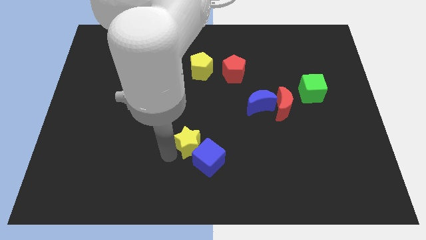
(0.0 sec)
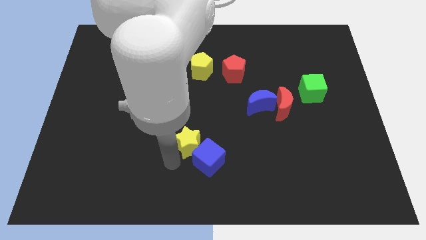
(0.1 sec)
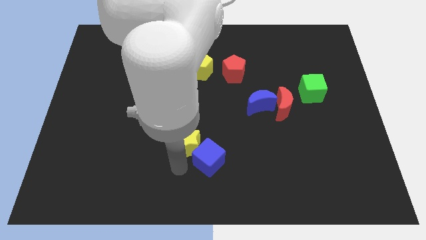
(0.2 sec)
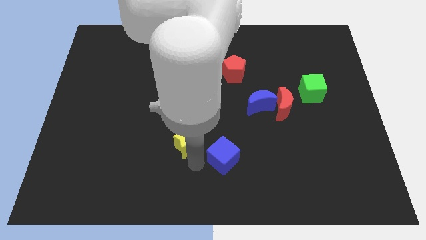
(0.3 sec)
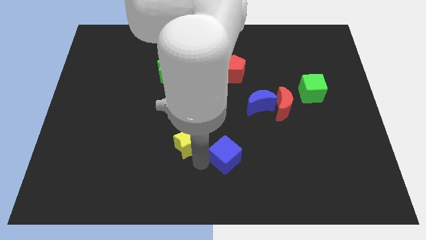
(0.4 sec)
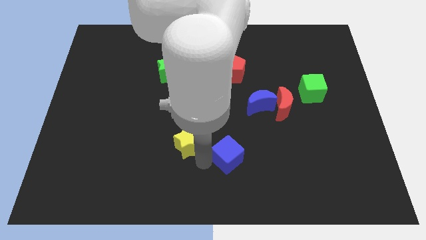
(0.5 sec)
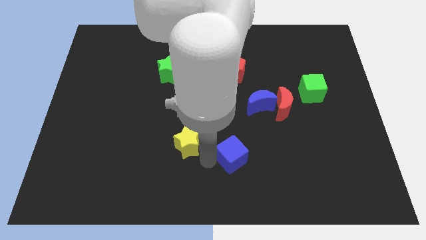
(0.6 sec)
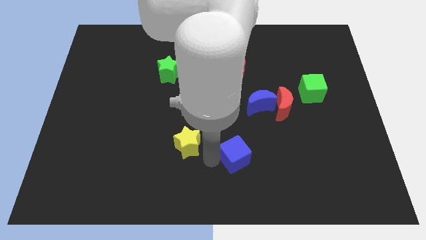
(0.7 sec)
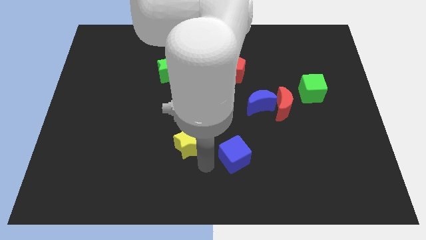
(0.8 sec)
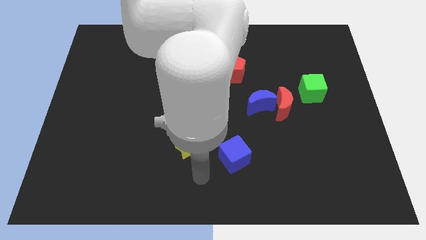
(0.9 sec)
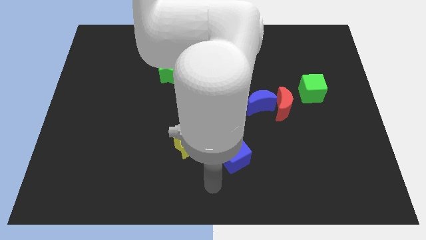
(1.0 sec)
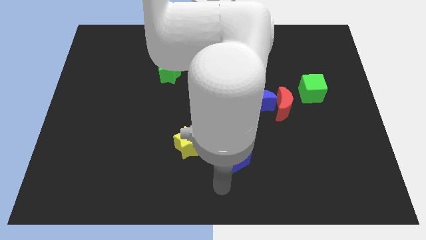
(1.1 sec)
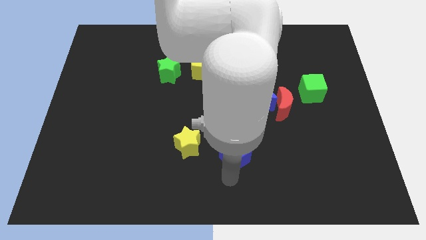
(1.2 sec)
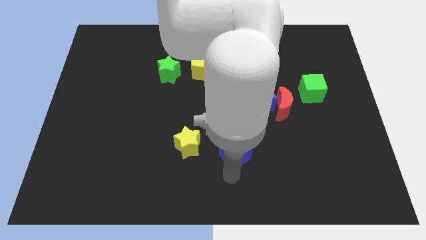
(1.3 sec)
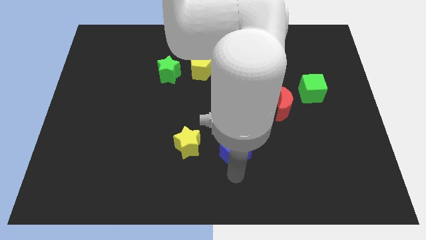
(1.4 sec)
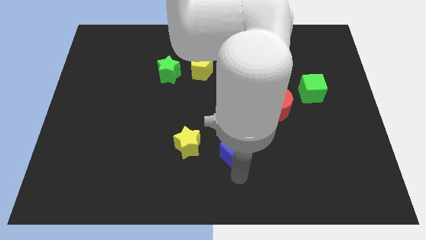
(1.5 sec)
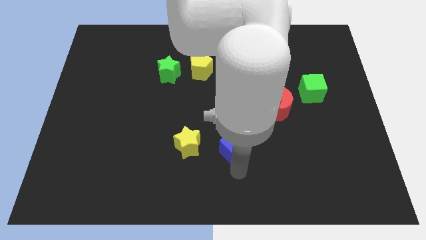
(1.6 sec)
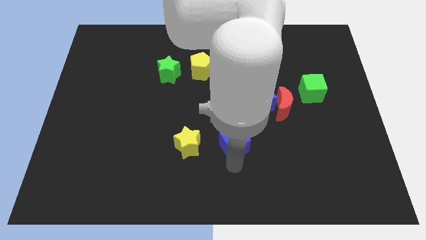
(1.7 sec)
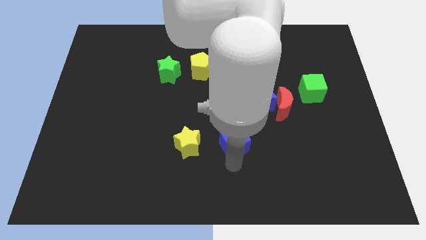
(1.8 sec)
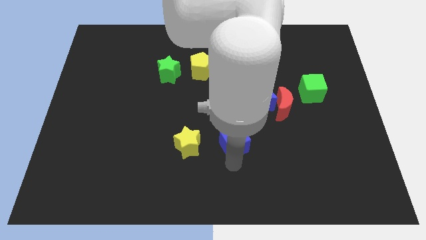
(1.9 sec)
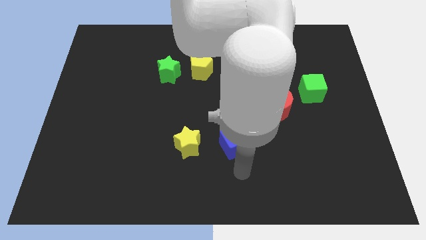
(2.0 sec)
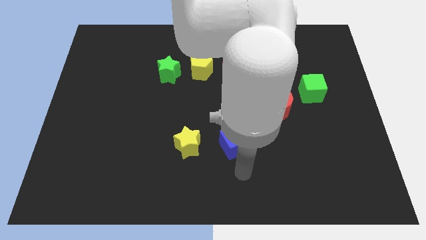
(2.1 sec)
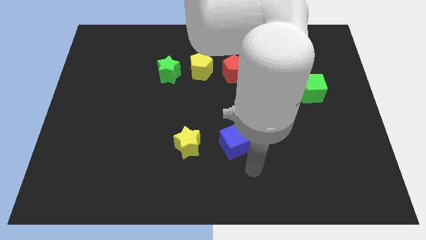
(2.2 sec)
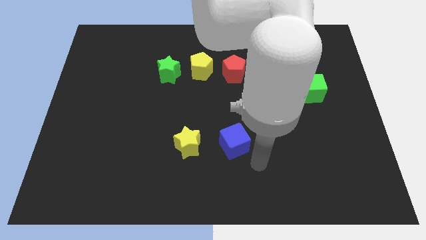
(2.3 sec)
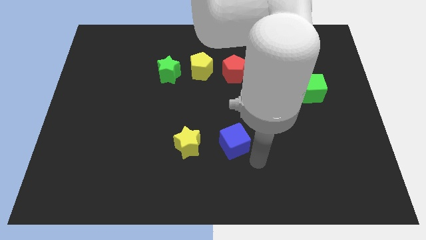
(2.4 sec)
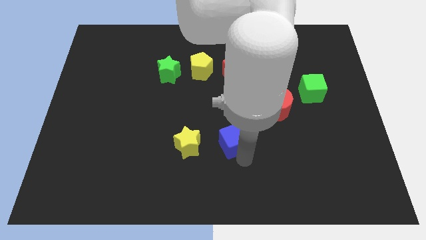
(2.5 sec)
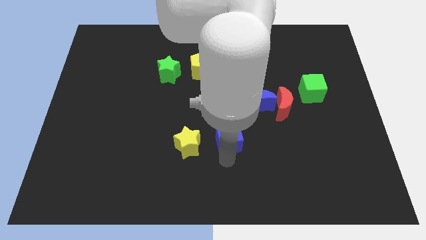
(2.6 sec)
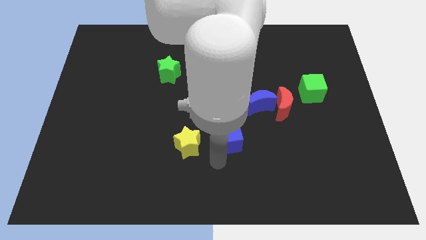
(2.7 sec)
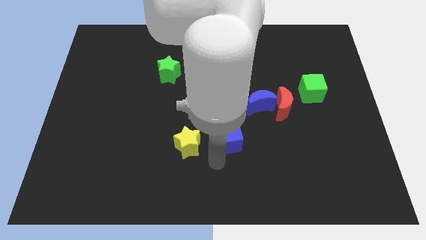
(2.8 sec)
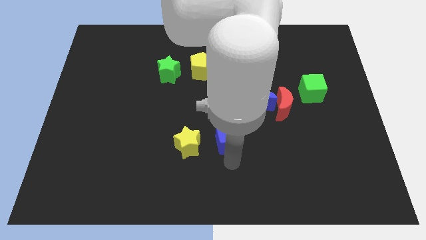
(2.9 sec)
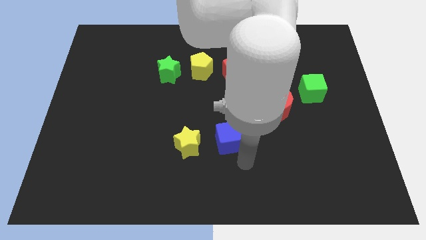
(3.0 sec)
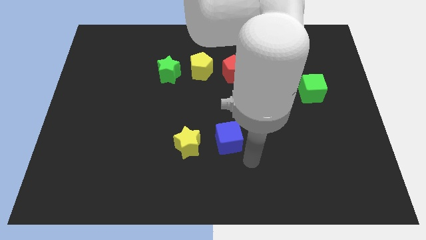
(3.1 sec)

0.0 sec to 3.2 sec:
adjust the blue cube to the right of yellow star

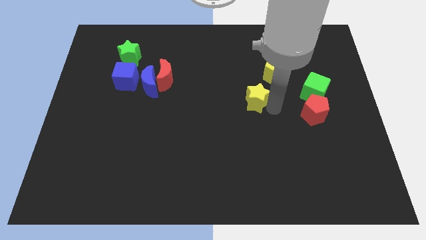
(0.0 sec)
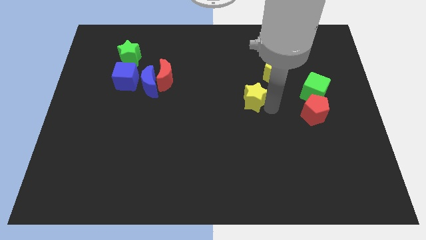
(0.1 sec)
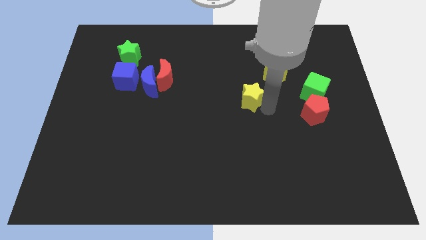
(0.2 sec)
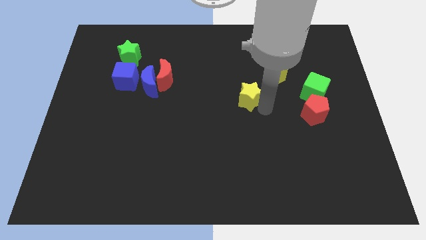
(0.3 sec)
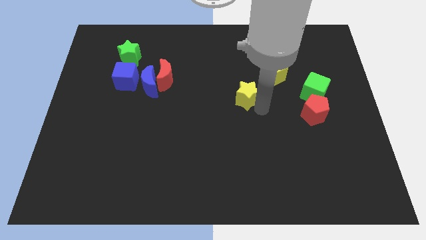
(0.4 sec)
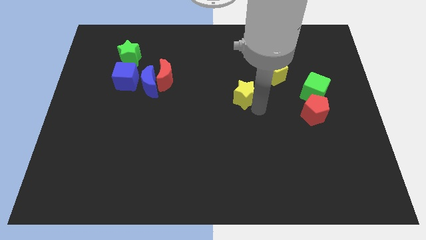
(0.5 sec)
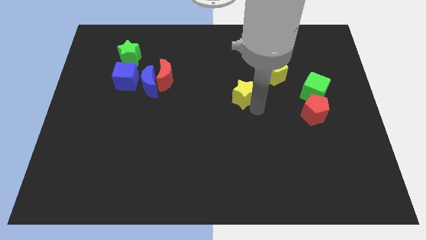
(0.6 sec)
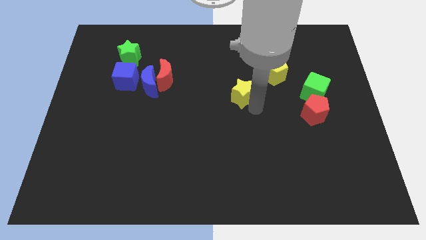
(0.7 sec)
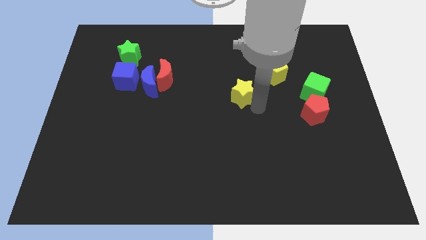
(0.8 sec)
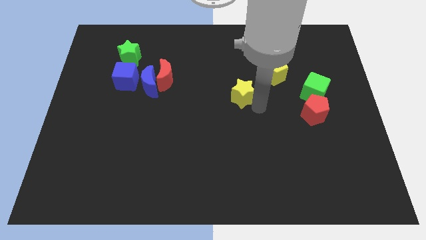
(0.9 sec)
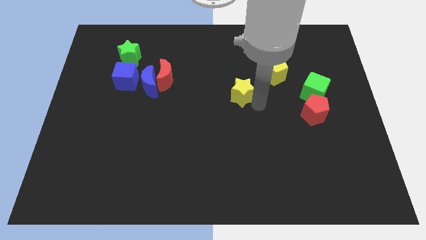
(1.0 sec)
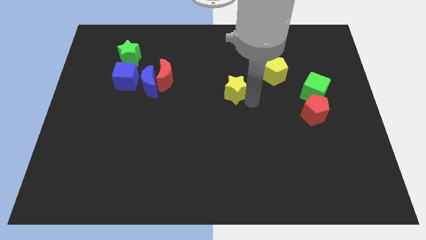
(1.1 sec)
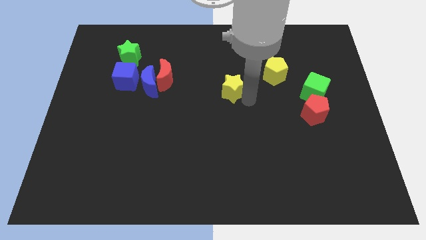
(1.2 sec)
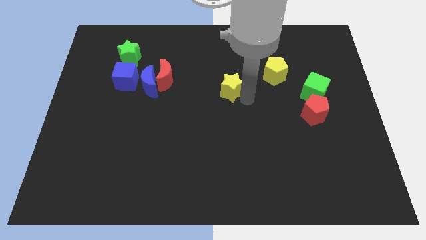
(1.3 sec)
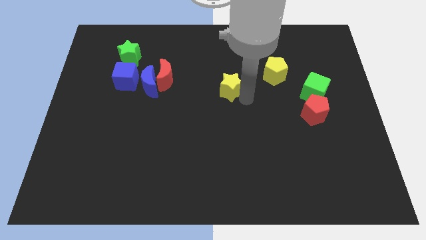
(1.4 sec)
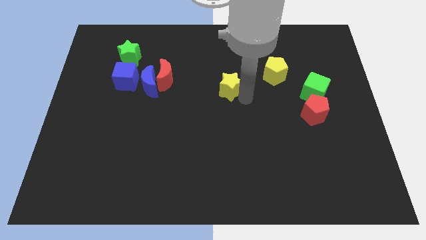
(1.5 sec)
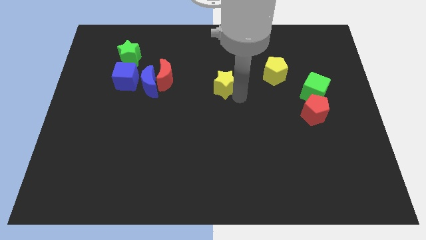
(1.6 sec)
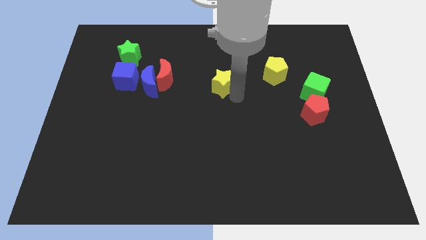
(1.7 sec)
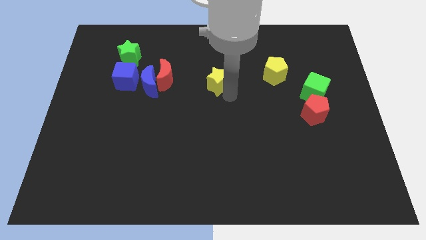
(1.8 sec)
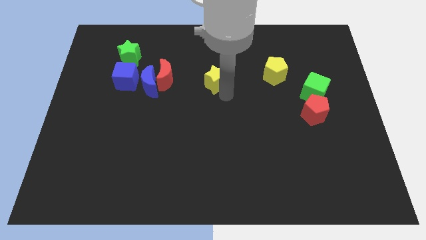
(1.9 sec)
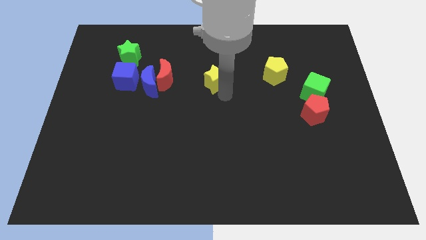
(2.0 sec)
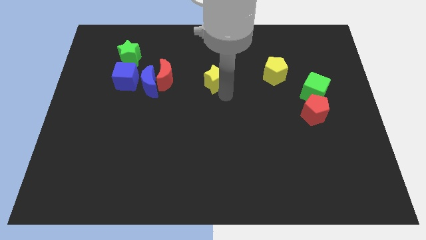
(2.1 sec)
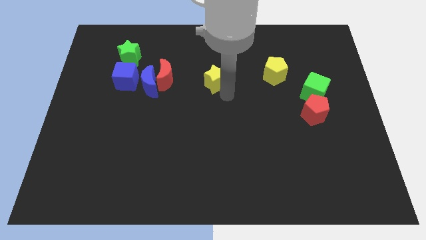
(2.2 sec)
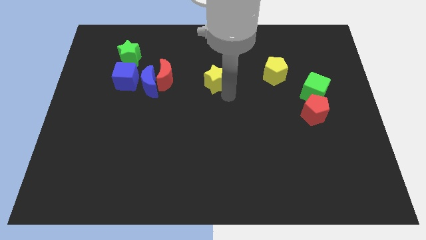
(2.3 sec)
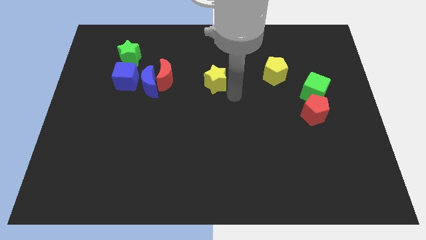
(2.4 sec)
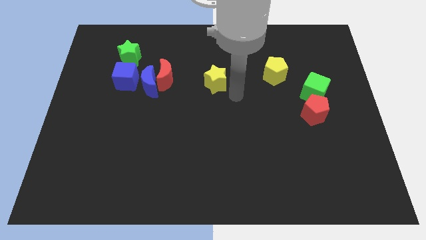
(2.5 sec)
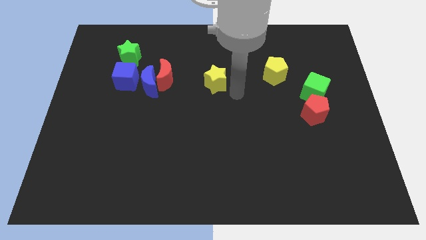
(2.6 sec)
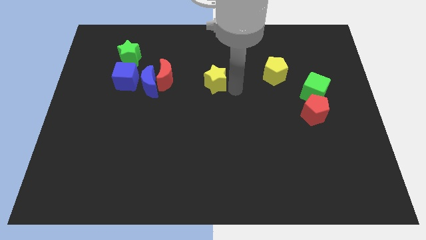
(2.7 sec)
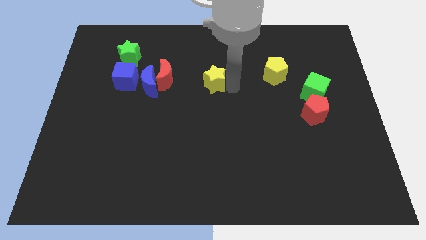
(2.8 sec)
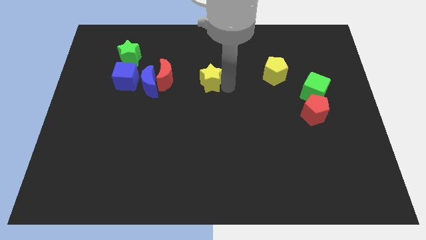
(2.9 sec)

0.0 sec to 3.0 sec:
push yellow star upwards

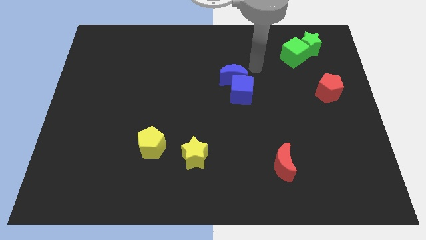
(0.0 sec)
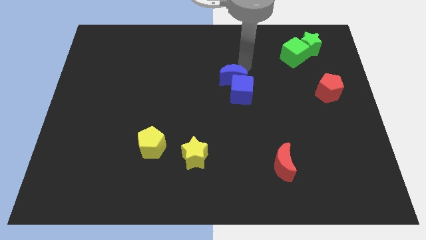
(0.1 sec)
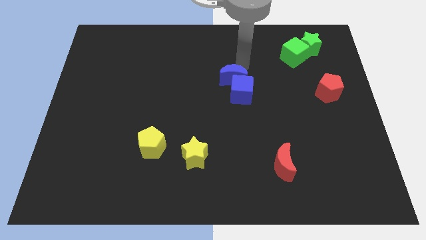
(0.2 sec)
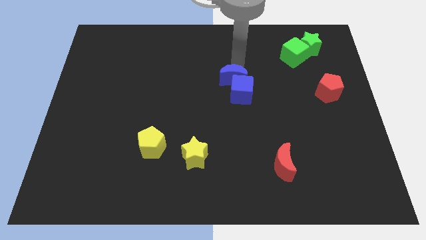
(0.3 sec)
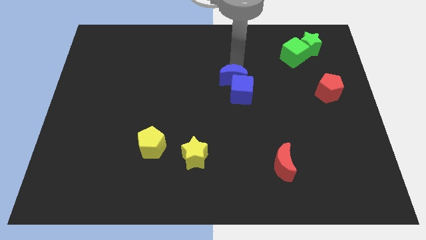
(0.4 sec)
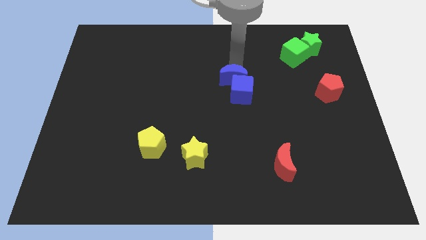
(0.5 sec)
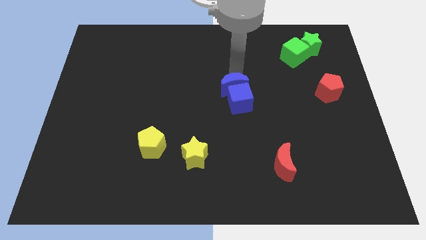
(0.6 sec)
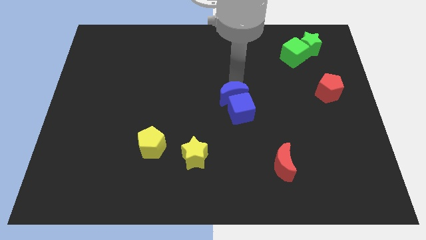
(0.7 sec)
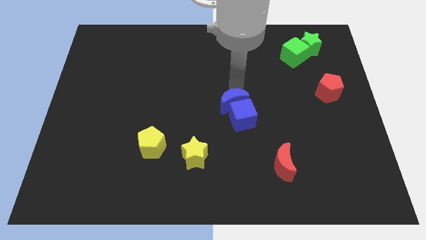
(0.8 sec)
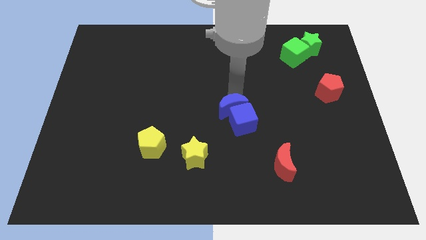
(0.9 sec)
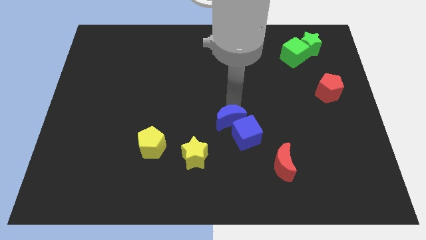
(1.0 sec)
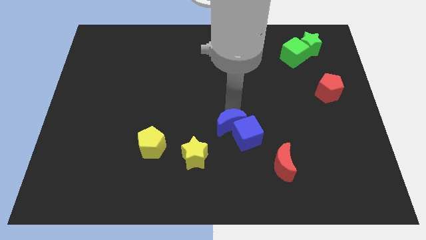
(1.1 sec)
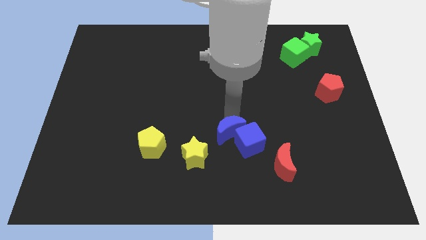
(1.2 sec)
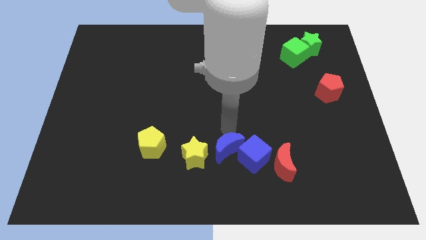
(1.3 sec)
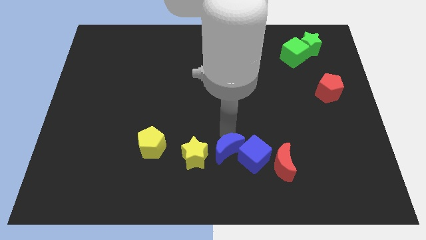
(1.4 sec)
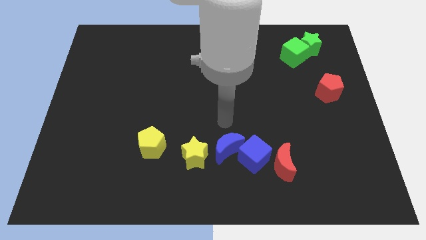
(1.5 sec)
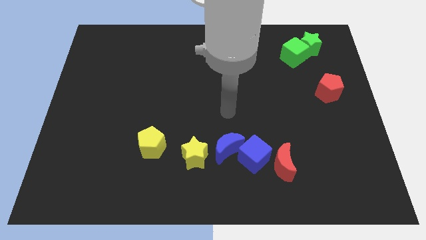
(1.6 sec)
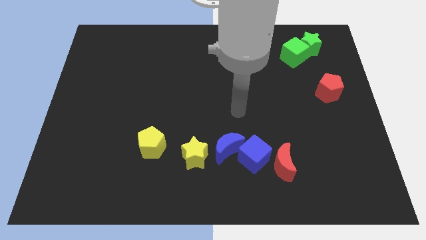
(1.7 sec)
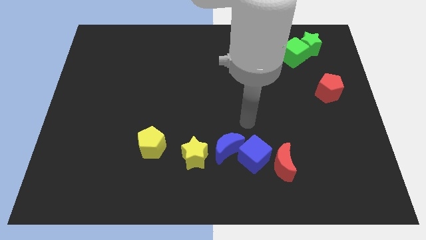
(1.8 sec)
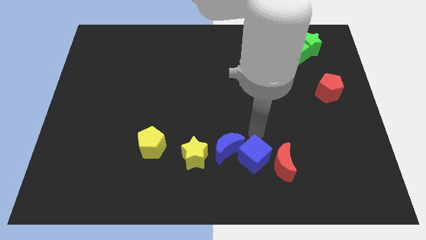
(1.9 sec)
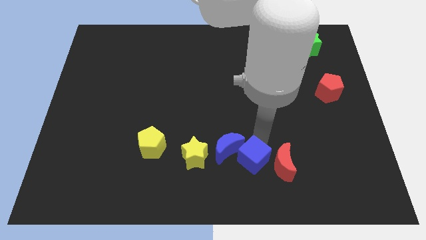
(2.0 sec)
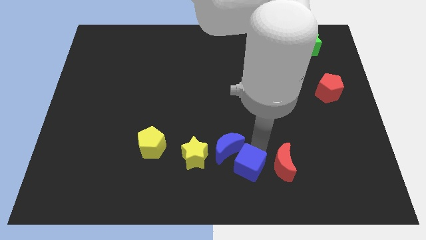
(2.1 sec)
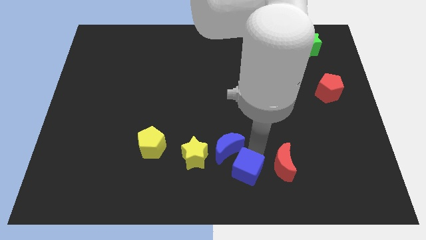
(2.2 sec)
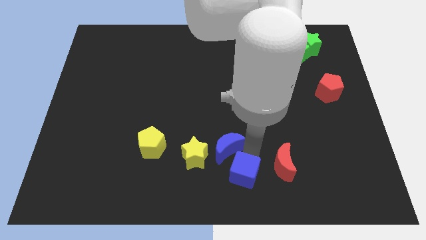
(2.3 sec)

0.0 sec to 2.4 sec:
move the blue crescent and blue cube to the bottom of the board

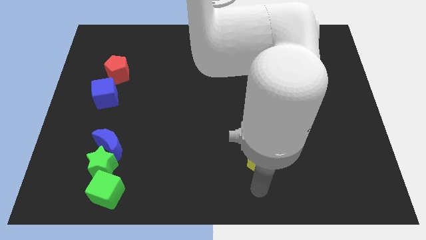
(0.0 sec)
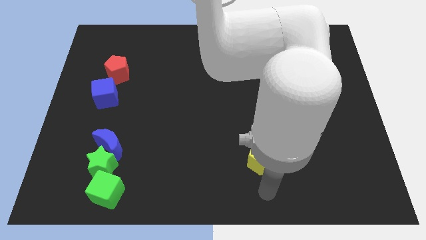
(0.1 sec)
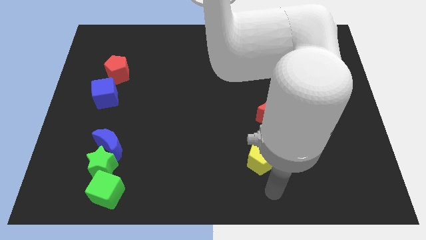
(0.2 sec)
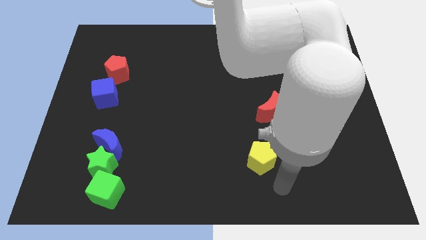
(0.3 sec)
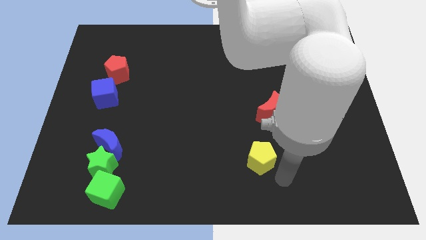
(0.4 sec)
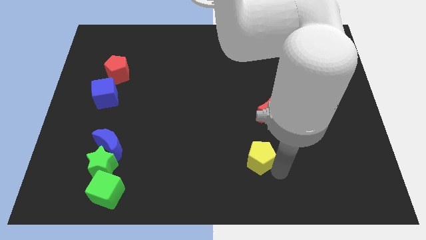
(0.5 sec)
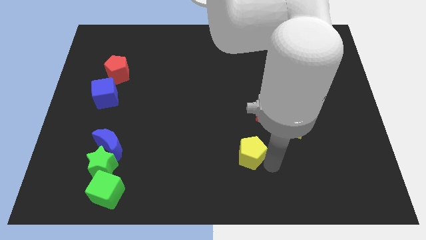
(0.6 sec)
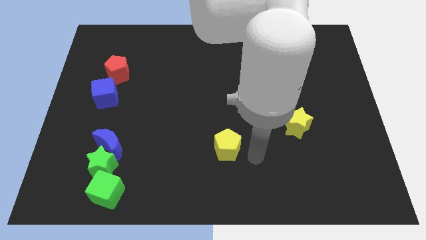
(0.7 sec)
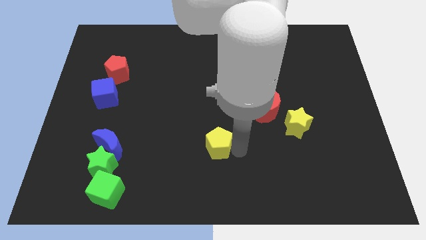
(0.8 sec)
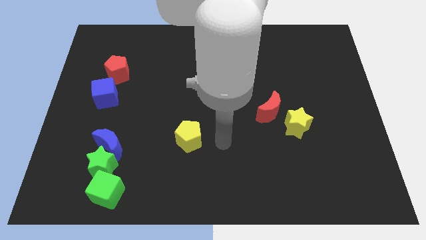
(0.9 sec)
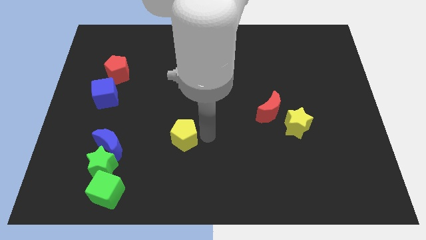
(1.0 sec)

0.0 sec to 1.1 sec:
place the yellow pentagon parallel to the right of the blue moon
